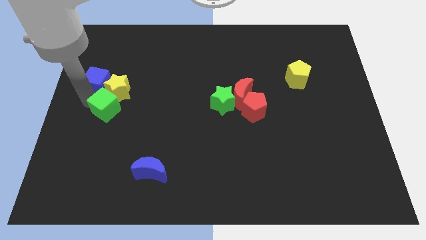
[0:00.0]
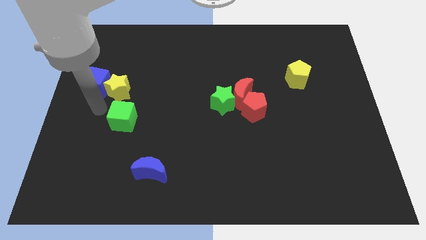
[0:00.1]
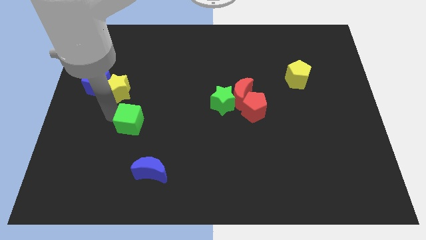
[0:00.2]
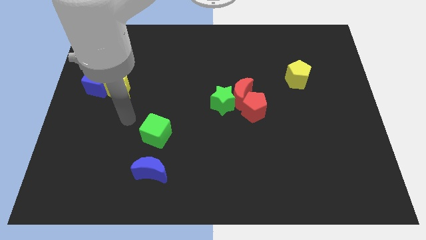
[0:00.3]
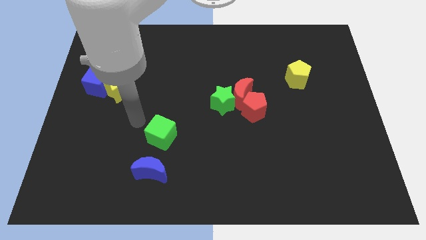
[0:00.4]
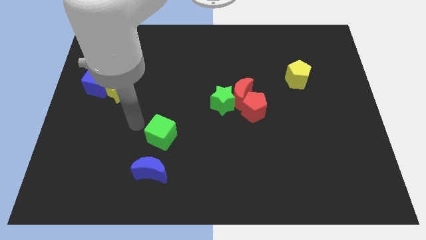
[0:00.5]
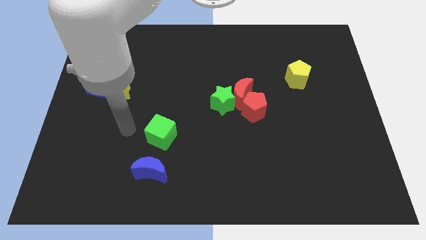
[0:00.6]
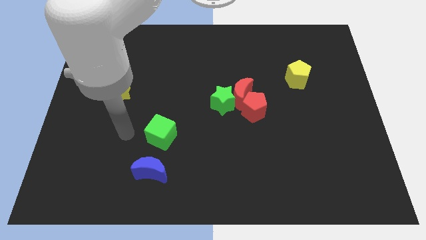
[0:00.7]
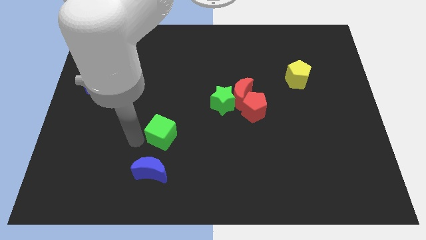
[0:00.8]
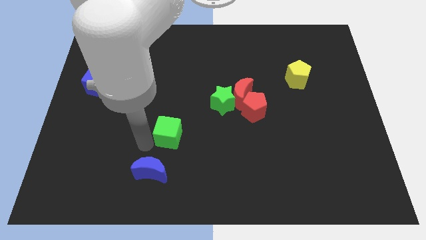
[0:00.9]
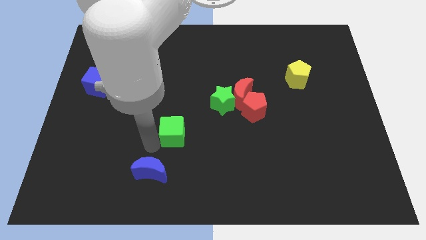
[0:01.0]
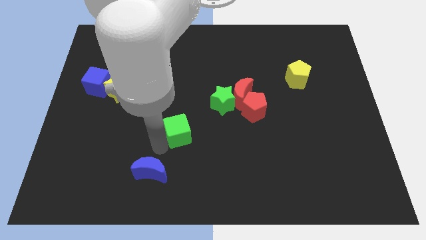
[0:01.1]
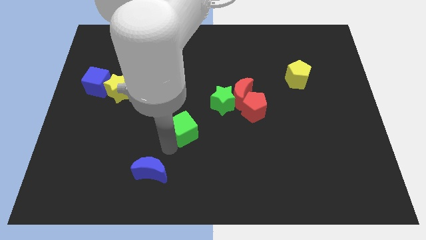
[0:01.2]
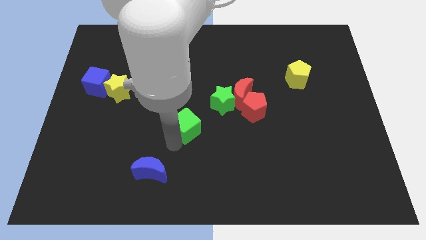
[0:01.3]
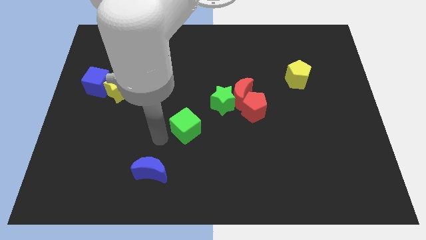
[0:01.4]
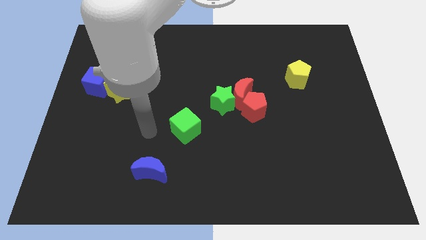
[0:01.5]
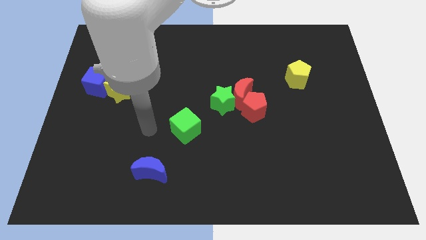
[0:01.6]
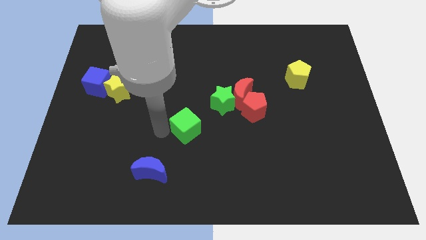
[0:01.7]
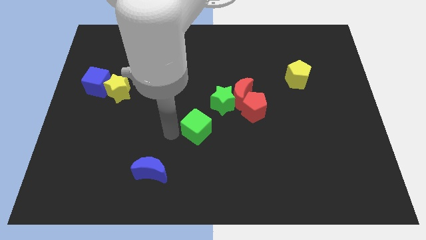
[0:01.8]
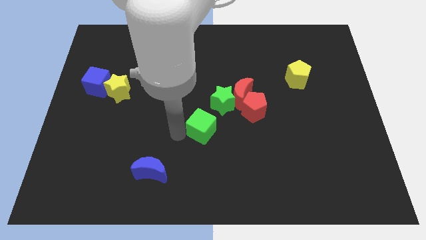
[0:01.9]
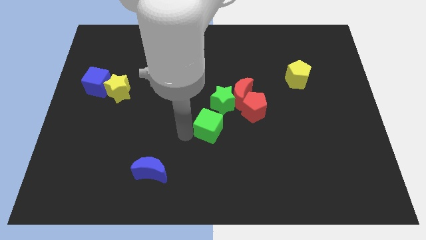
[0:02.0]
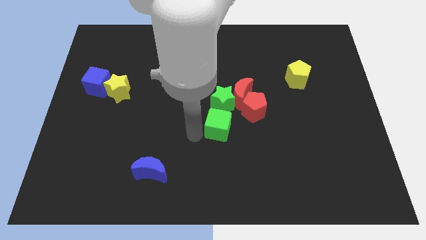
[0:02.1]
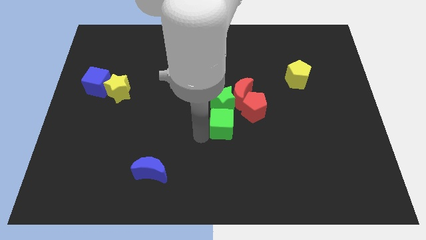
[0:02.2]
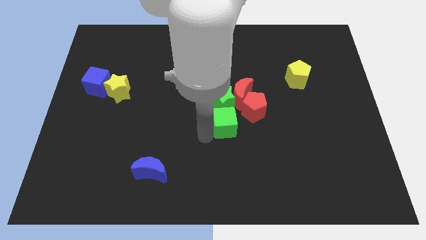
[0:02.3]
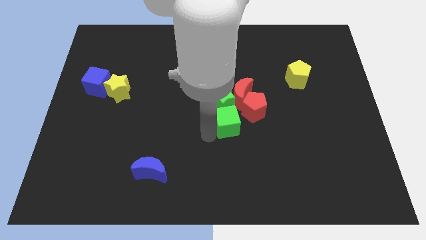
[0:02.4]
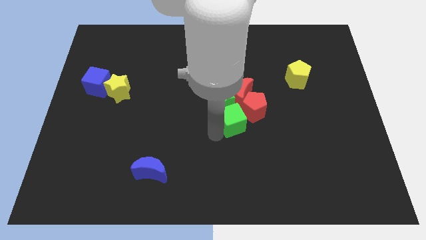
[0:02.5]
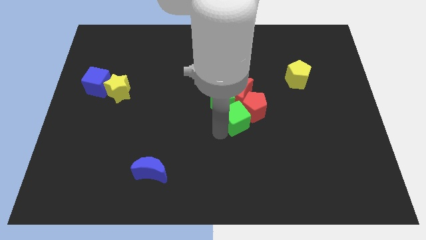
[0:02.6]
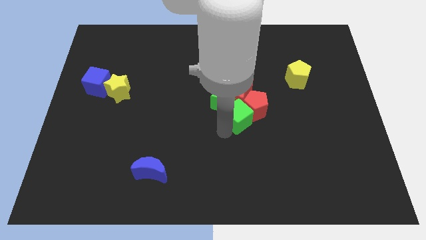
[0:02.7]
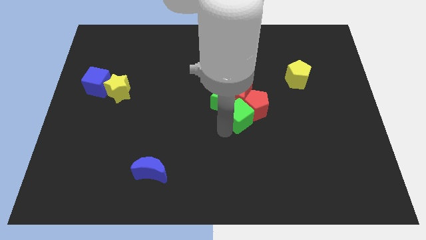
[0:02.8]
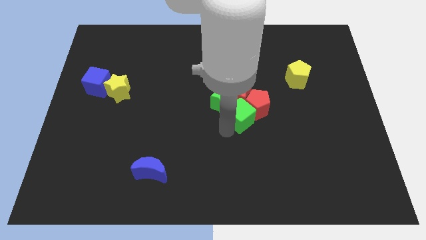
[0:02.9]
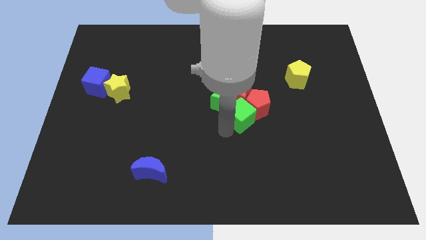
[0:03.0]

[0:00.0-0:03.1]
place green cube bottom right to green star

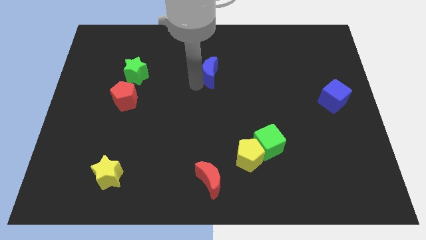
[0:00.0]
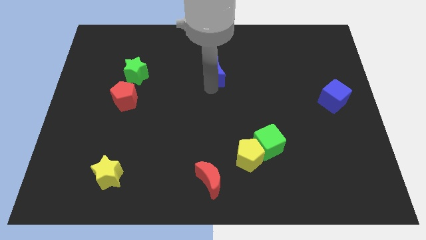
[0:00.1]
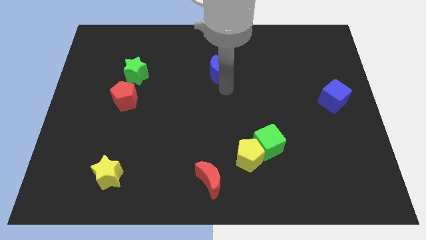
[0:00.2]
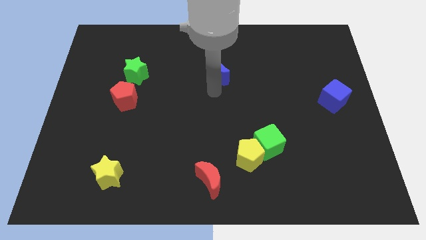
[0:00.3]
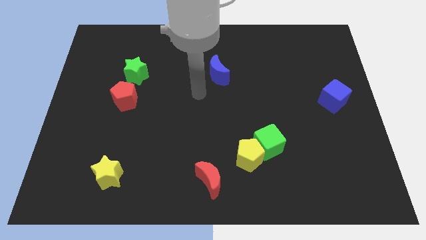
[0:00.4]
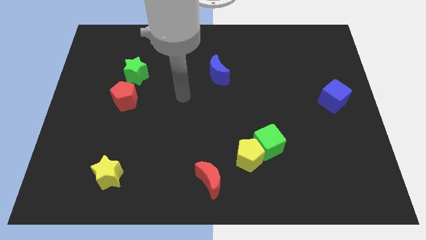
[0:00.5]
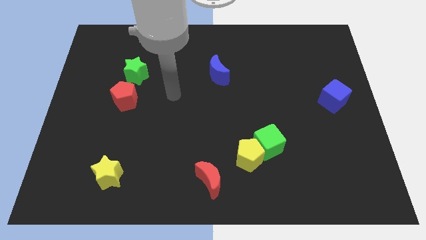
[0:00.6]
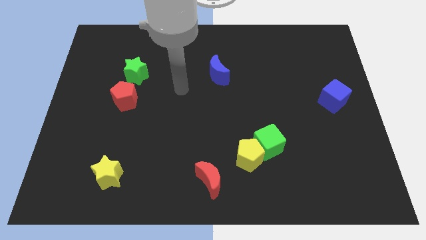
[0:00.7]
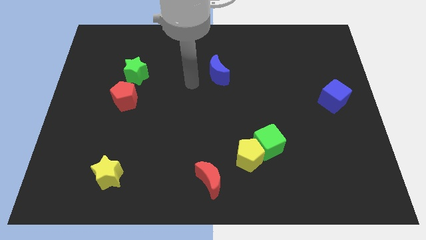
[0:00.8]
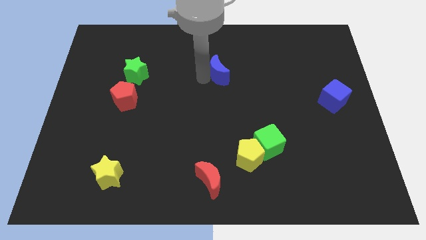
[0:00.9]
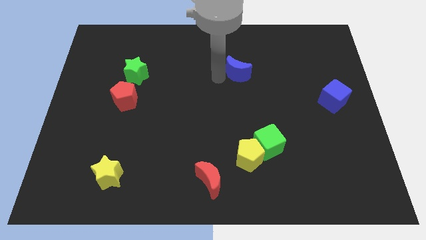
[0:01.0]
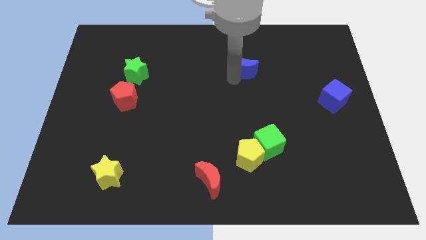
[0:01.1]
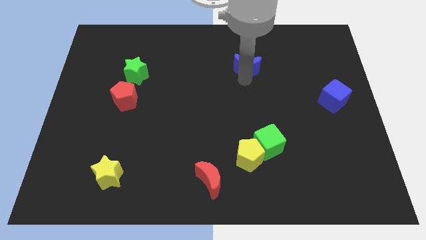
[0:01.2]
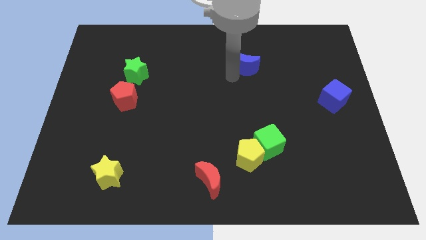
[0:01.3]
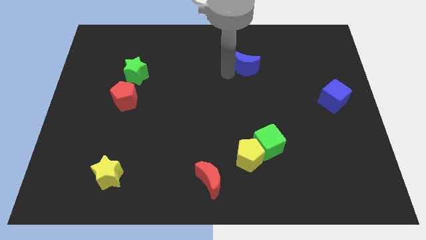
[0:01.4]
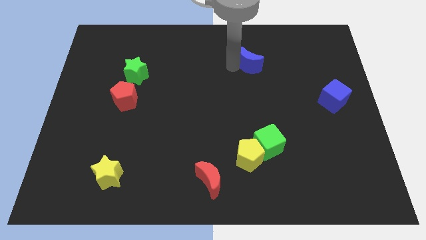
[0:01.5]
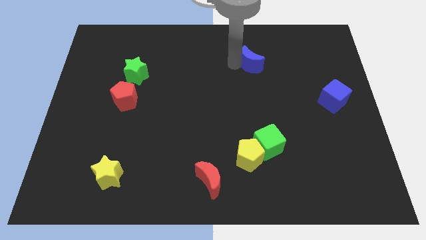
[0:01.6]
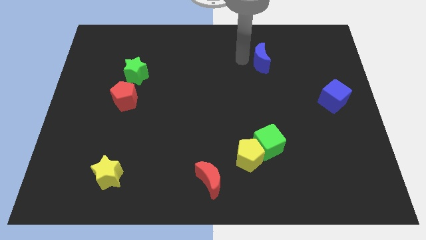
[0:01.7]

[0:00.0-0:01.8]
push blue moon towards right side

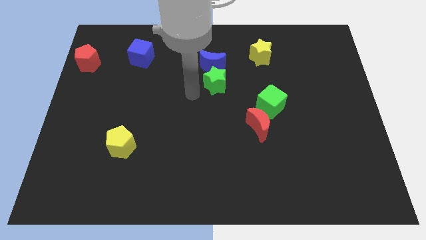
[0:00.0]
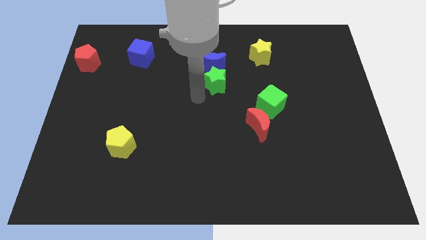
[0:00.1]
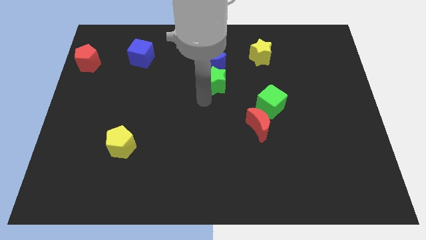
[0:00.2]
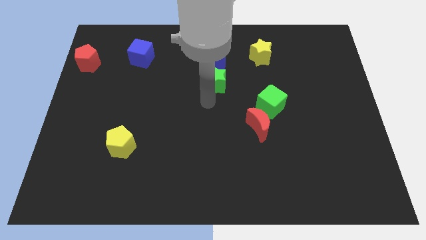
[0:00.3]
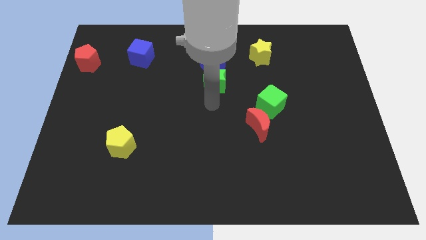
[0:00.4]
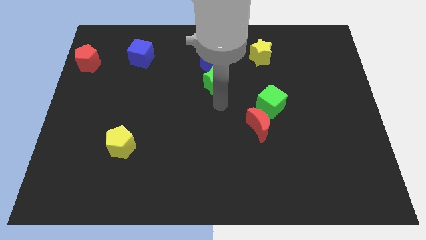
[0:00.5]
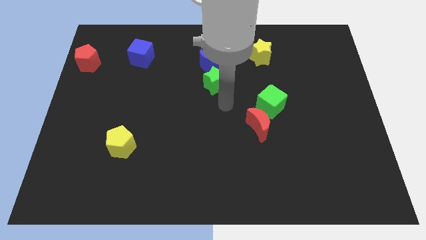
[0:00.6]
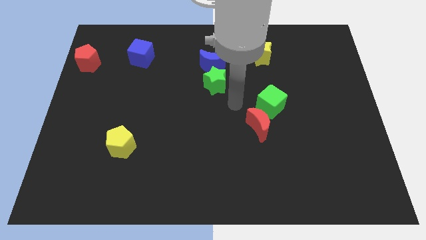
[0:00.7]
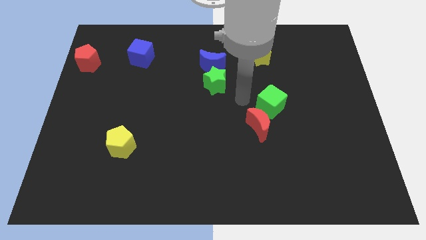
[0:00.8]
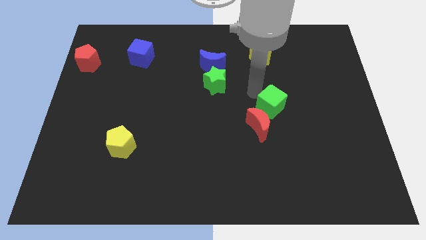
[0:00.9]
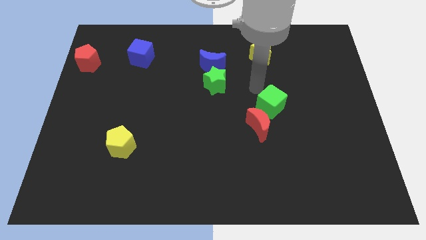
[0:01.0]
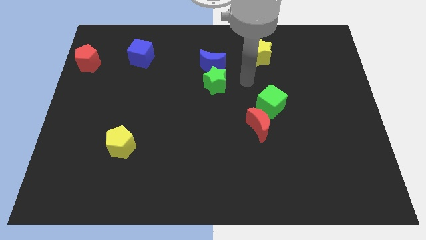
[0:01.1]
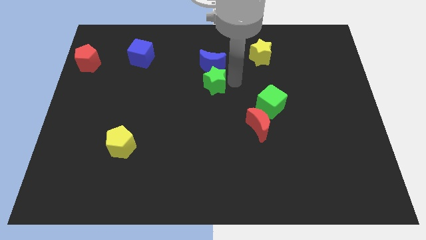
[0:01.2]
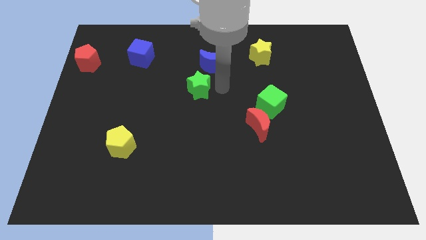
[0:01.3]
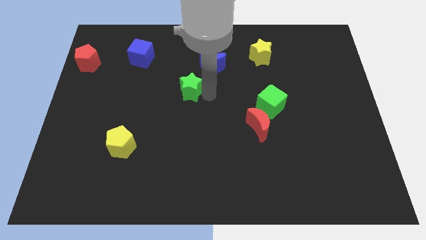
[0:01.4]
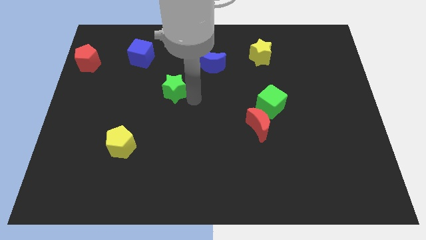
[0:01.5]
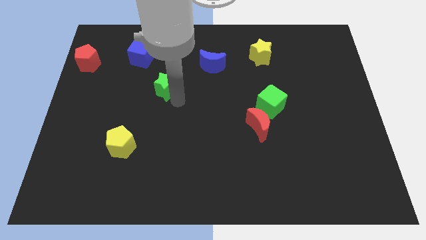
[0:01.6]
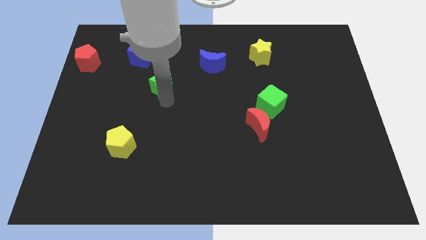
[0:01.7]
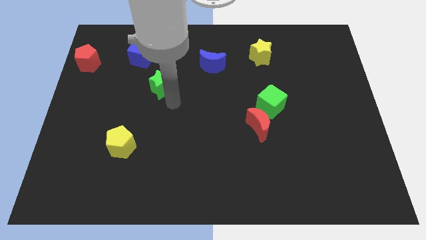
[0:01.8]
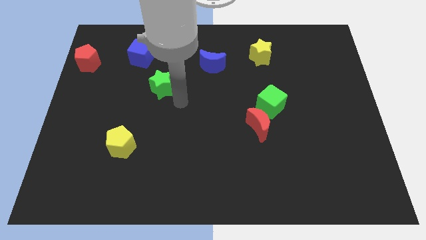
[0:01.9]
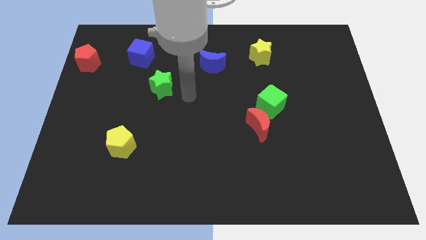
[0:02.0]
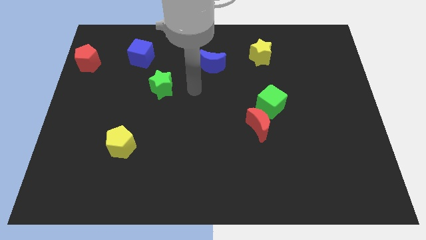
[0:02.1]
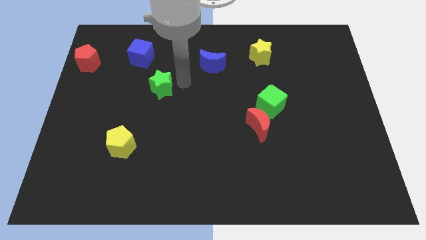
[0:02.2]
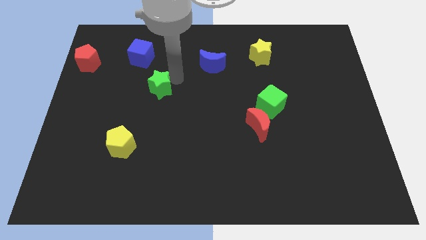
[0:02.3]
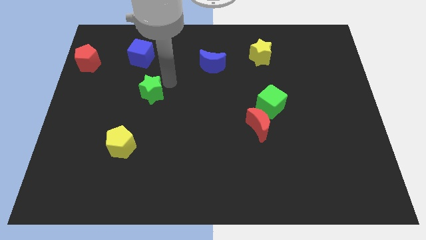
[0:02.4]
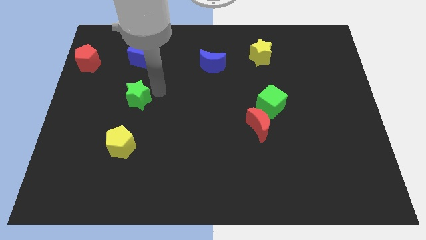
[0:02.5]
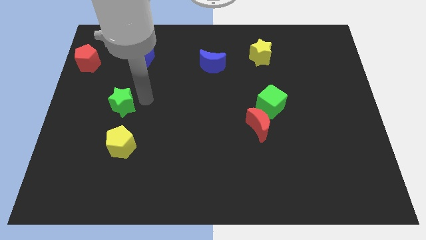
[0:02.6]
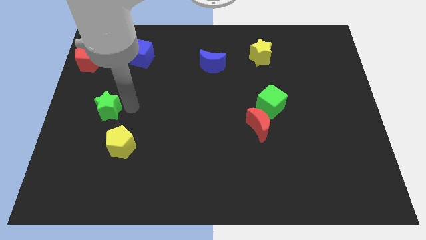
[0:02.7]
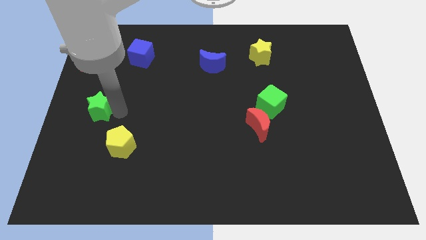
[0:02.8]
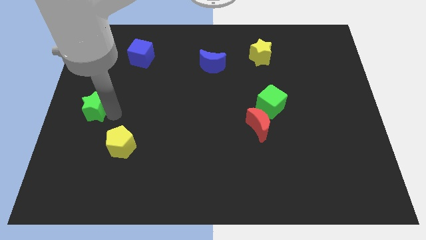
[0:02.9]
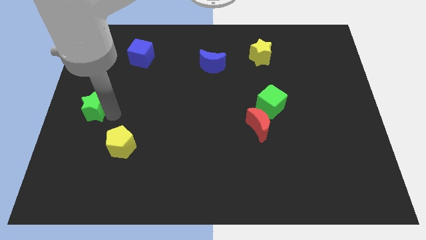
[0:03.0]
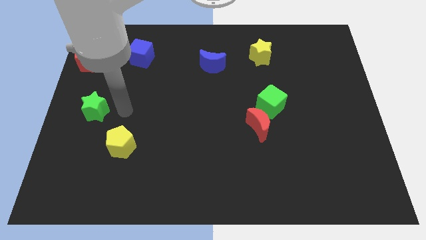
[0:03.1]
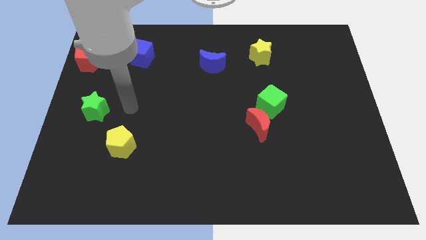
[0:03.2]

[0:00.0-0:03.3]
move the green star diagonally above the top left side of the yellow pentagon

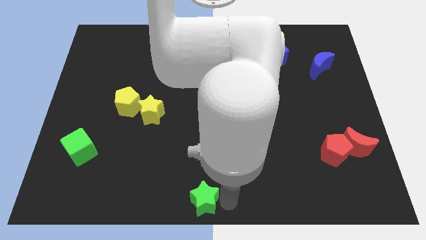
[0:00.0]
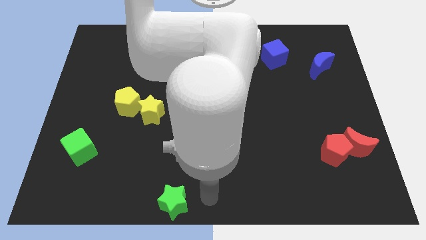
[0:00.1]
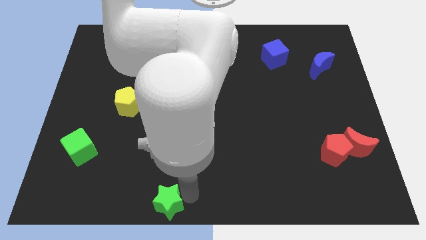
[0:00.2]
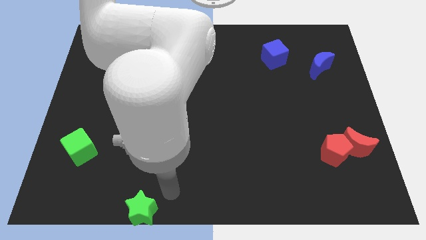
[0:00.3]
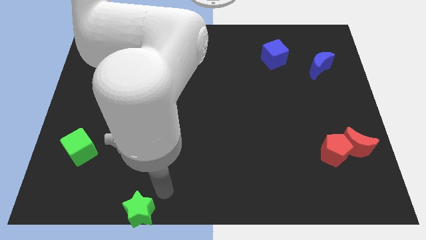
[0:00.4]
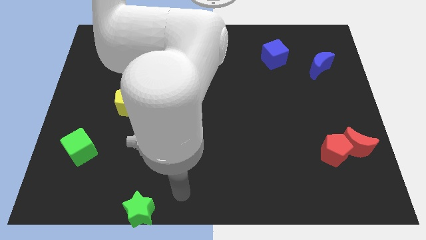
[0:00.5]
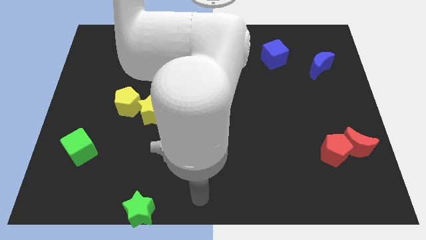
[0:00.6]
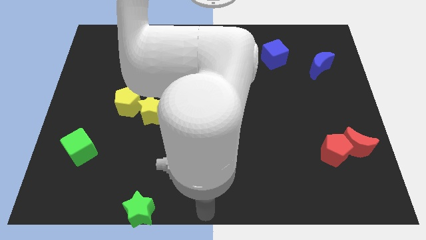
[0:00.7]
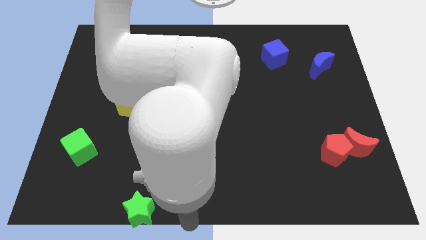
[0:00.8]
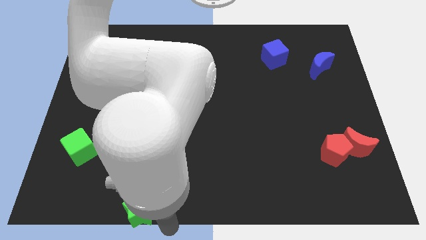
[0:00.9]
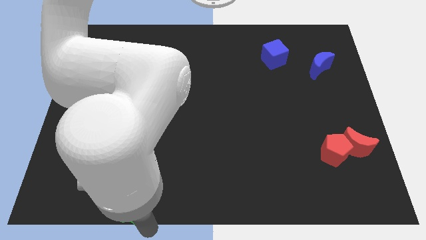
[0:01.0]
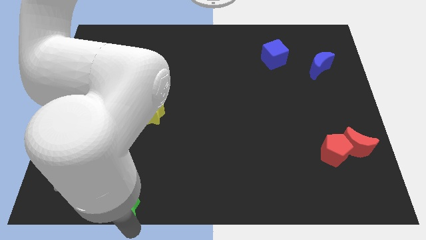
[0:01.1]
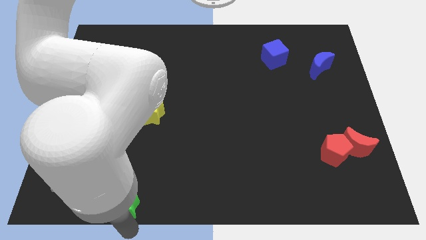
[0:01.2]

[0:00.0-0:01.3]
move green star slightly to the left side of the board
